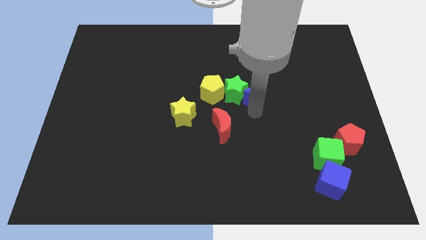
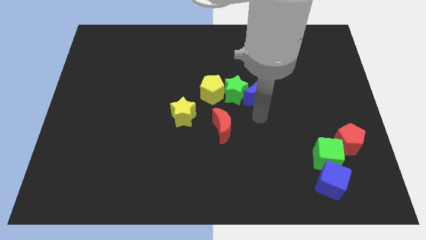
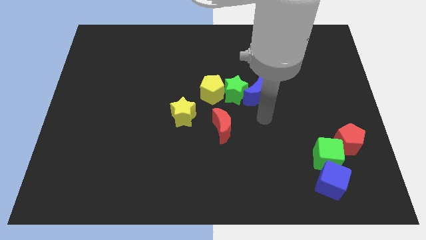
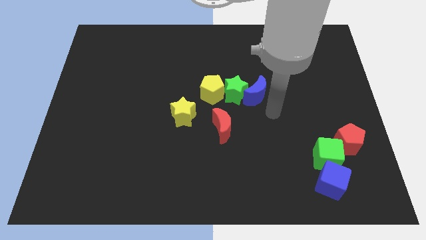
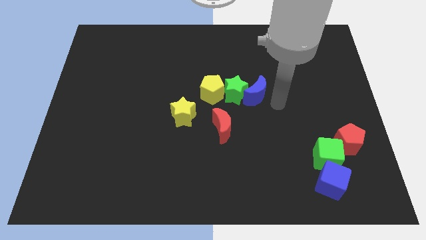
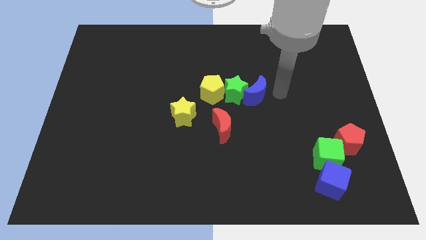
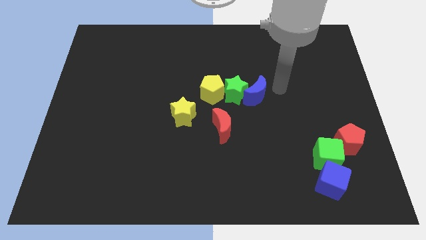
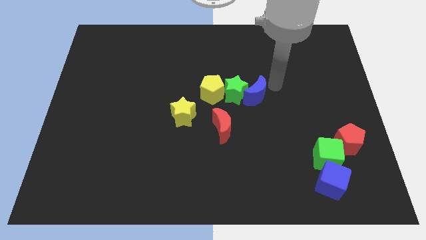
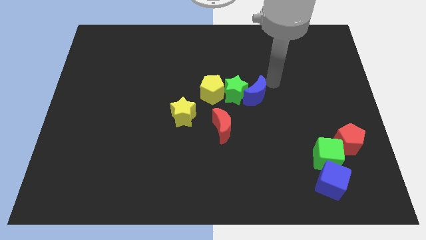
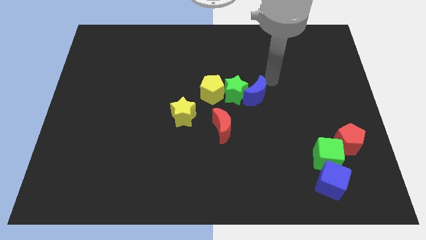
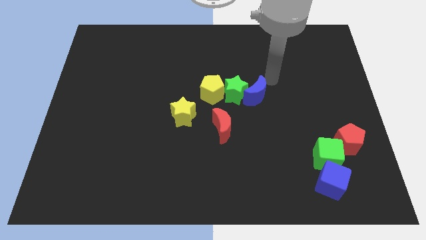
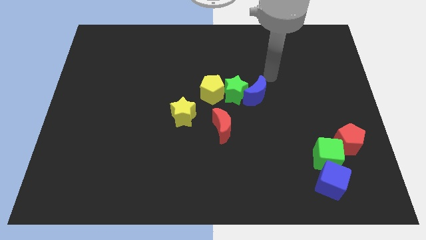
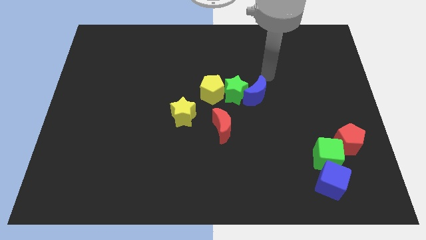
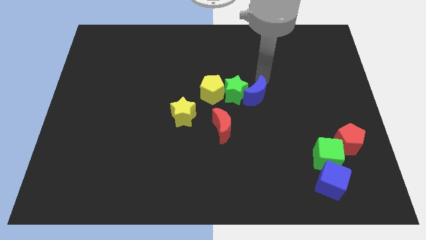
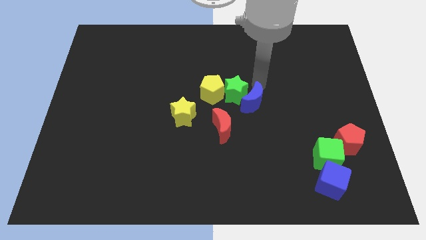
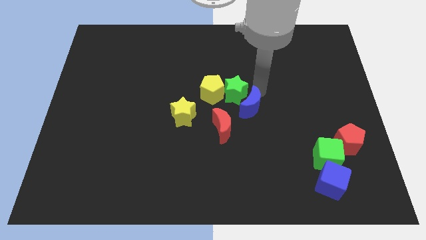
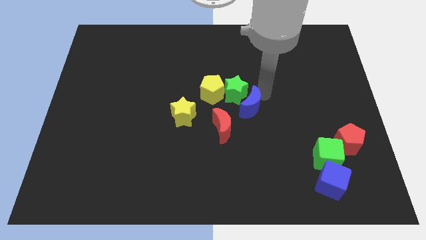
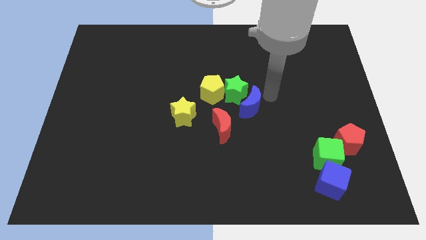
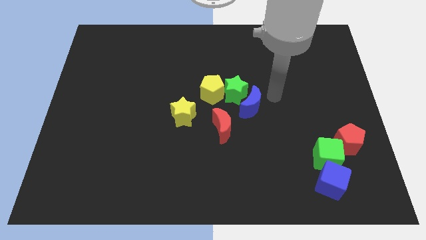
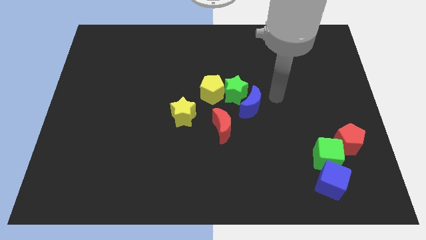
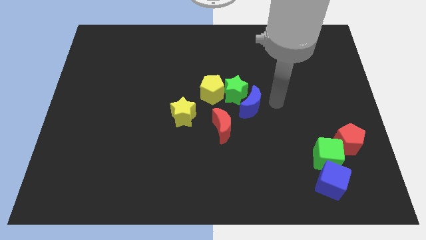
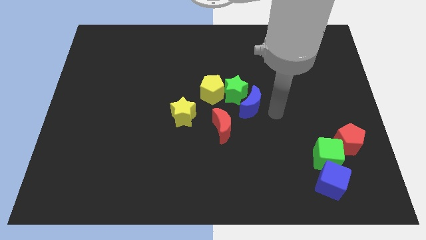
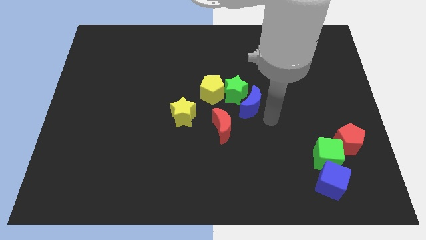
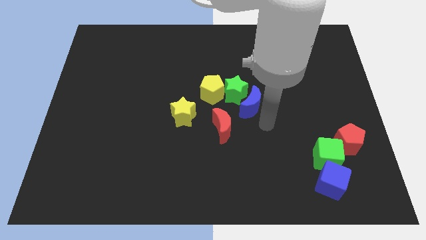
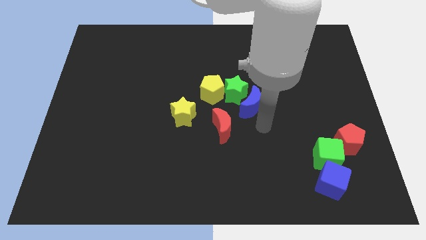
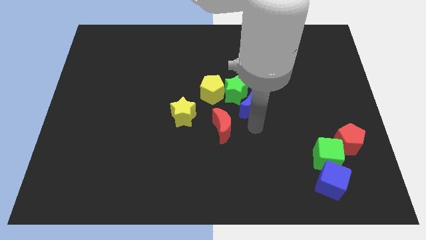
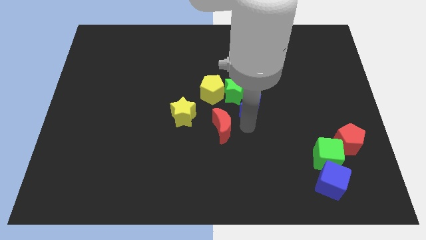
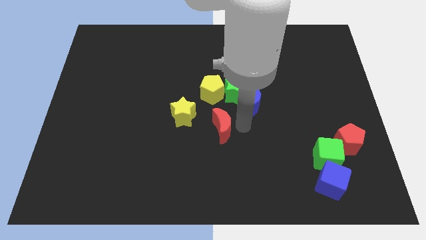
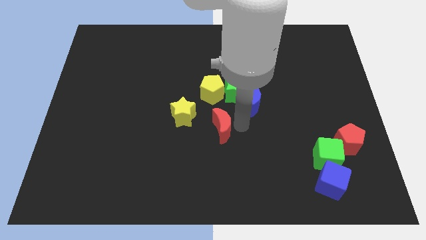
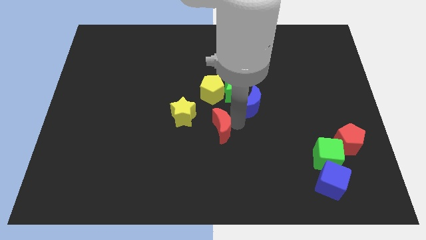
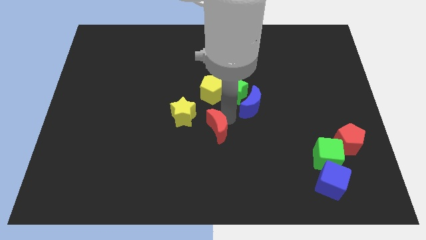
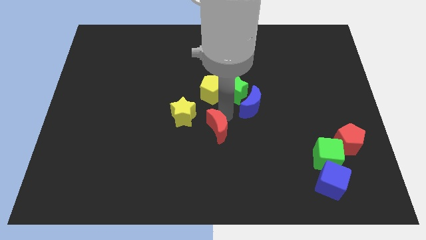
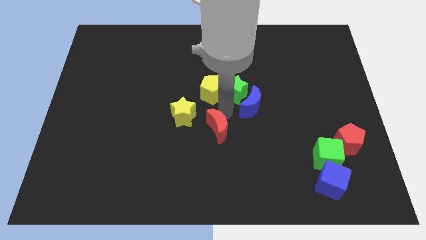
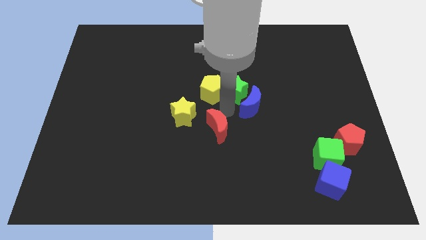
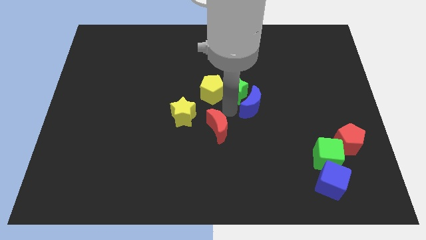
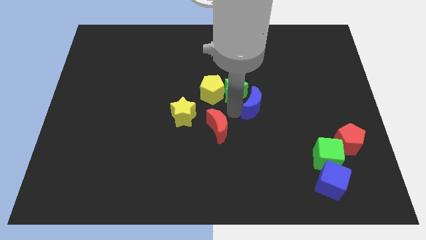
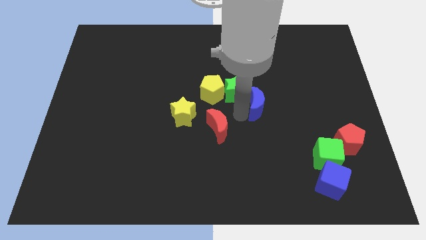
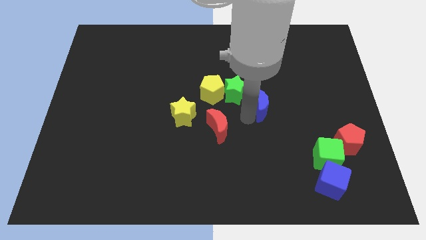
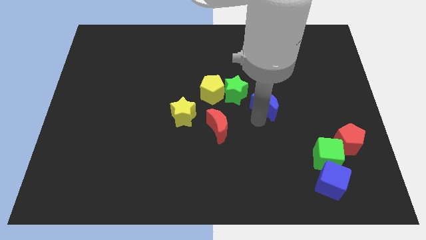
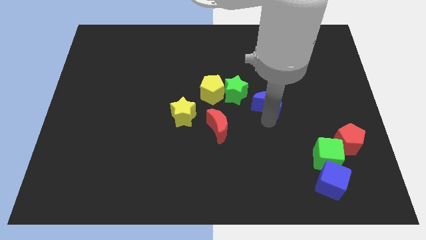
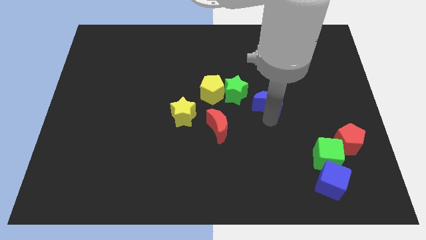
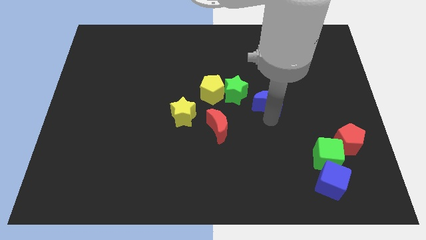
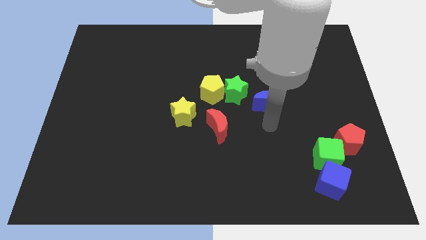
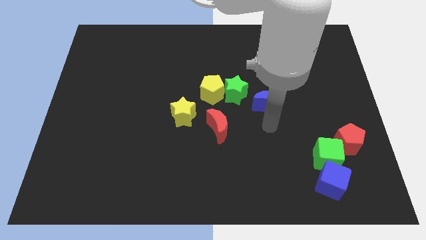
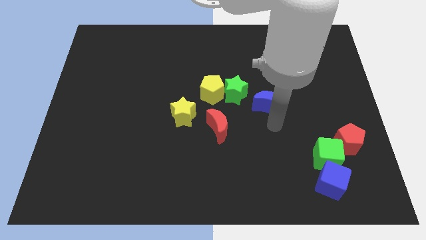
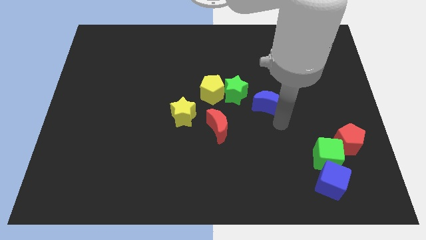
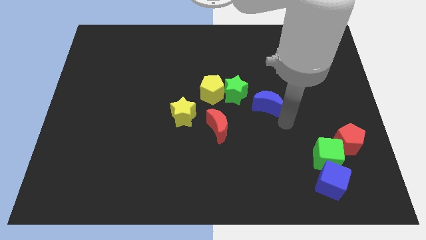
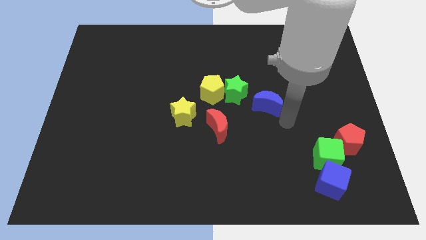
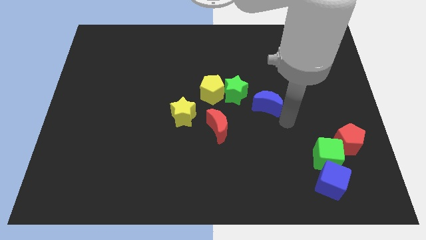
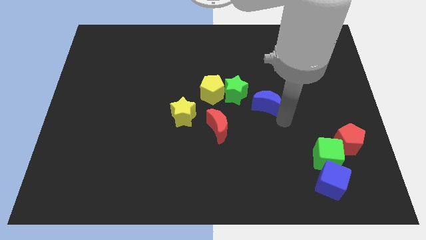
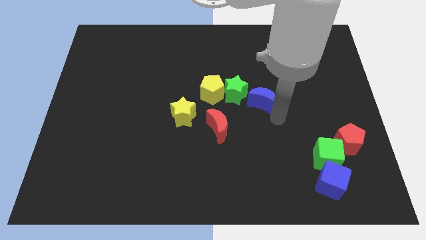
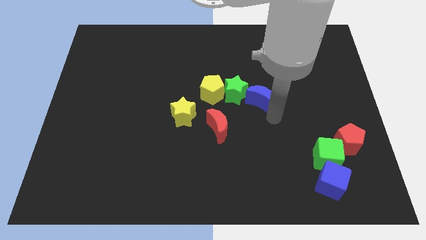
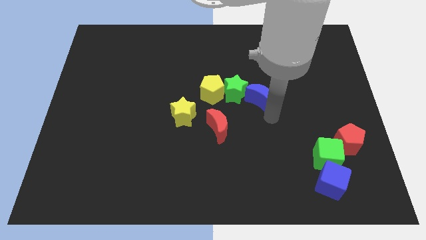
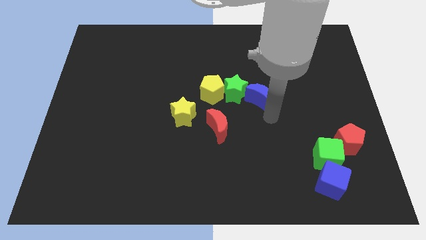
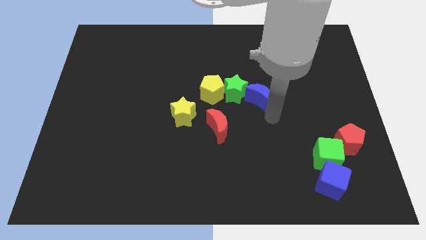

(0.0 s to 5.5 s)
push blue crescent into green star

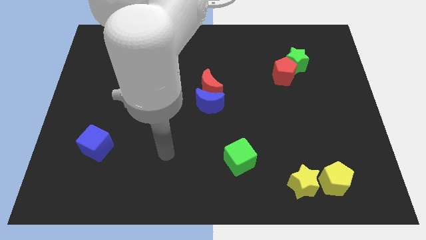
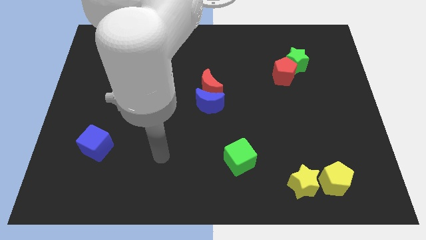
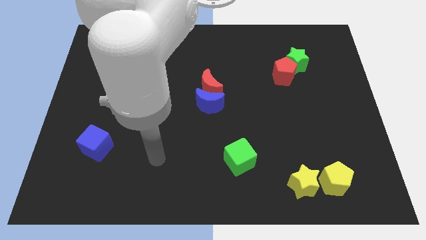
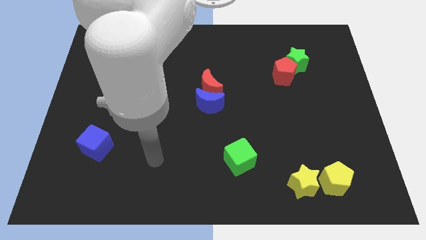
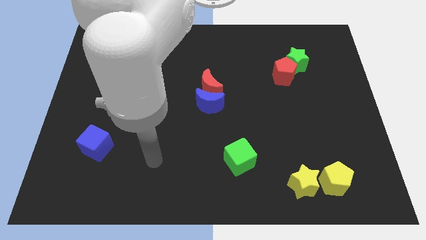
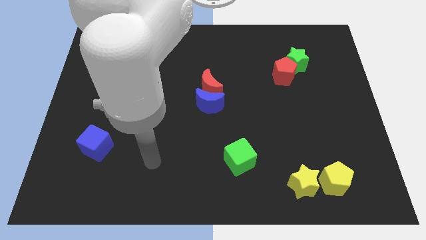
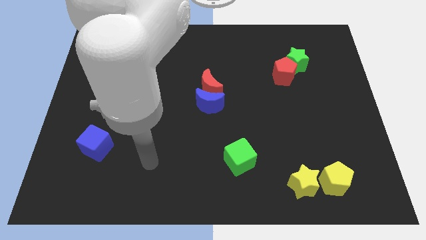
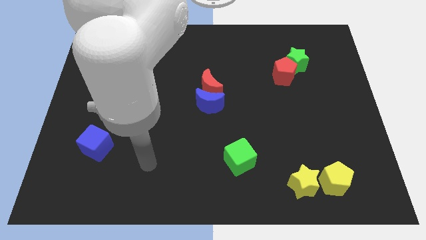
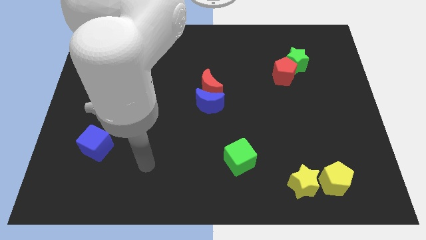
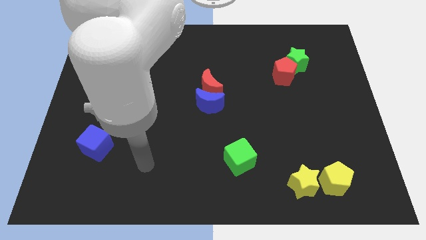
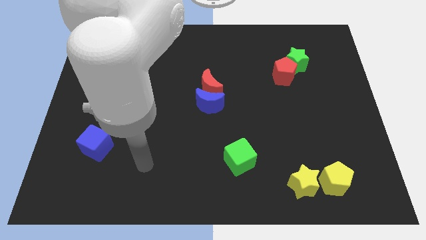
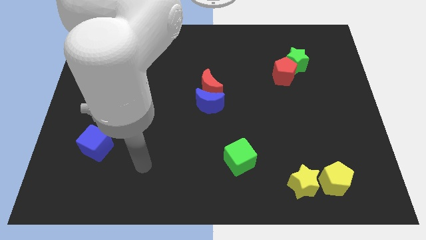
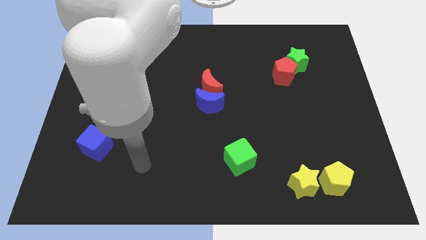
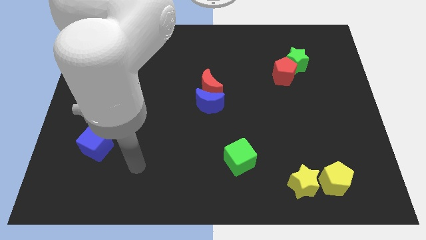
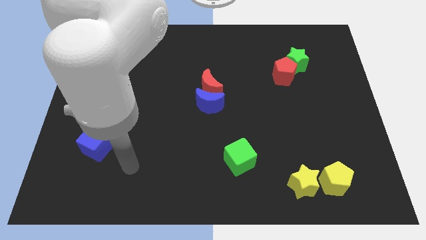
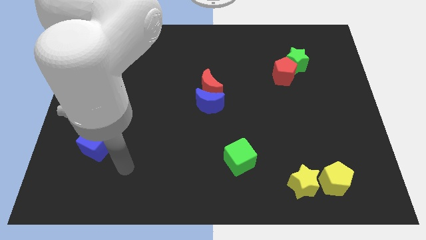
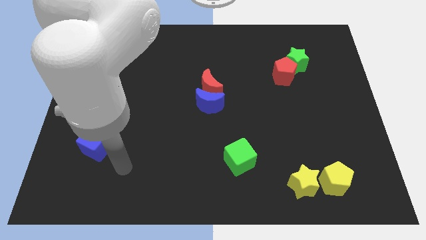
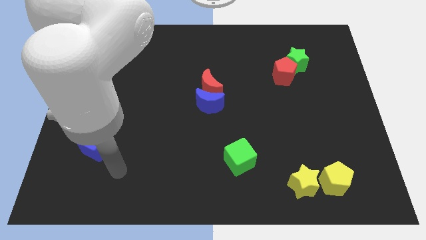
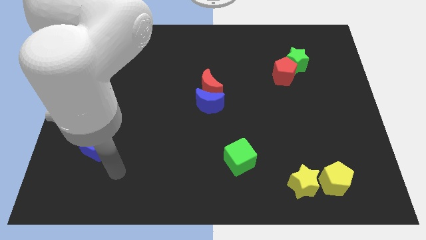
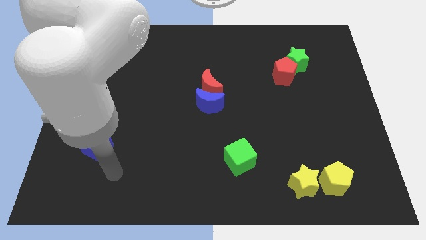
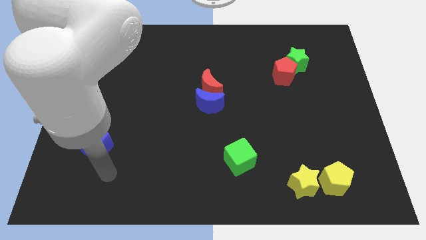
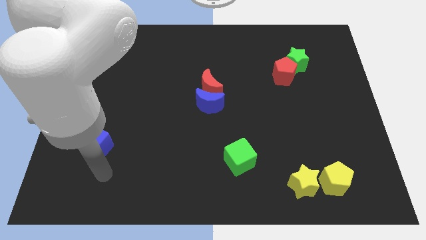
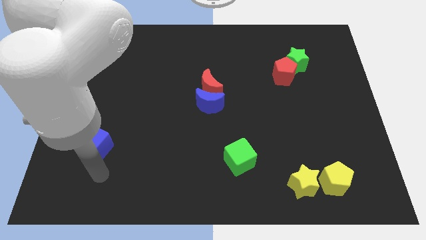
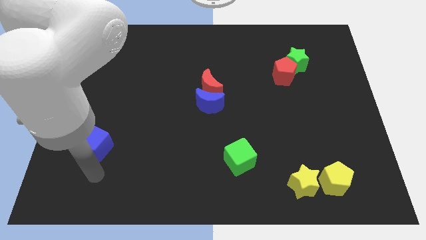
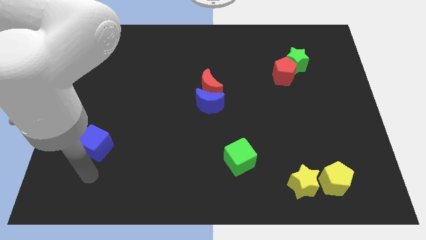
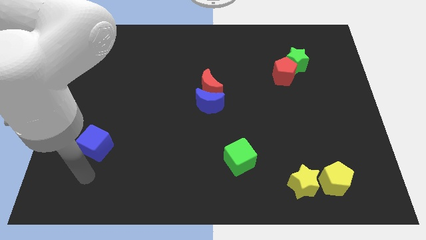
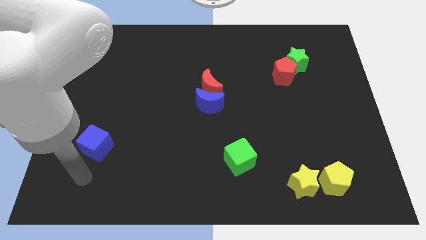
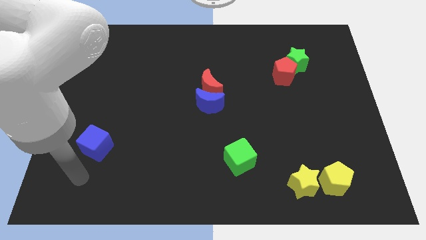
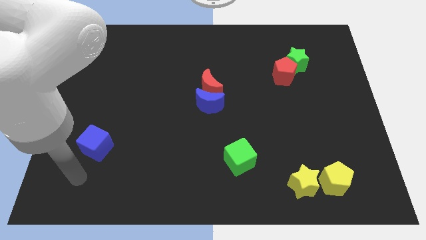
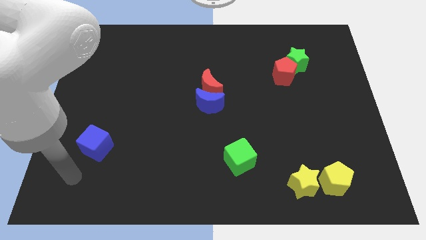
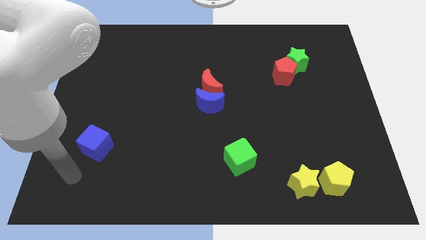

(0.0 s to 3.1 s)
move the arm near to the blue cube

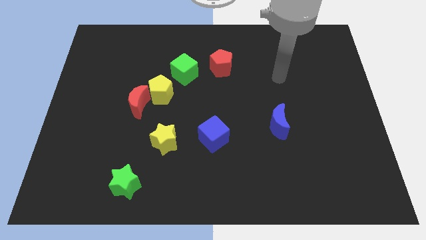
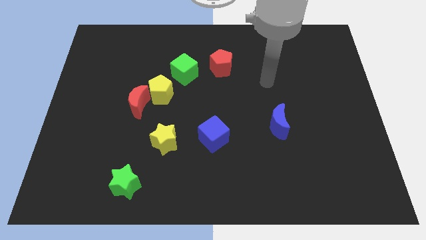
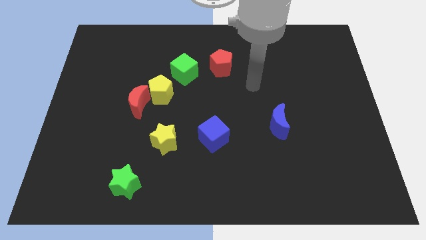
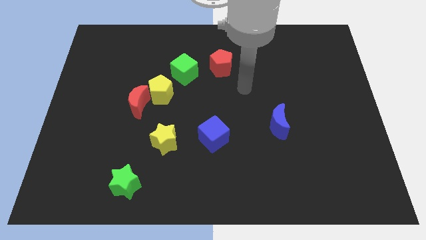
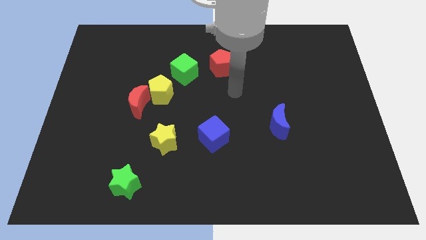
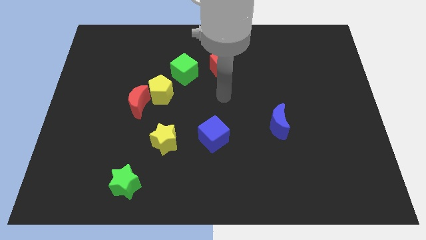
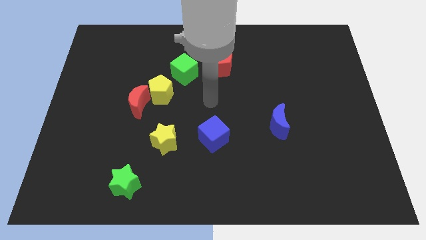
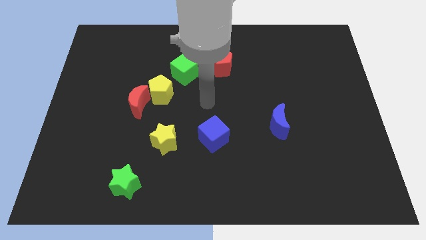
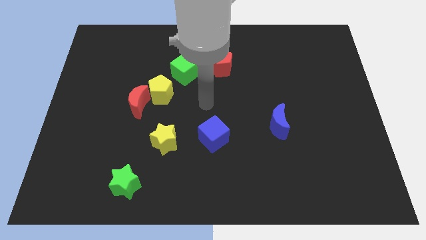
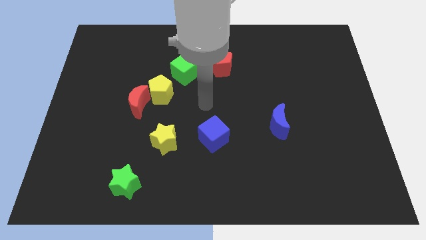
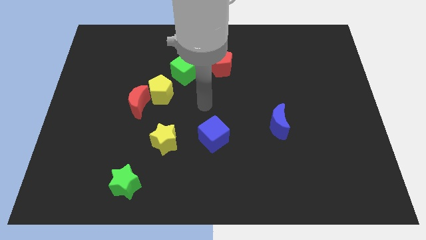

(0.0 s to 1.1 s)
place arm on the top of blue cube
